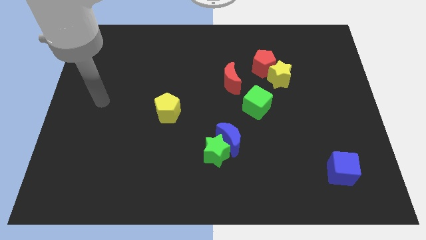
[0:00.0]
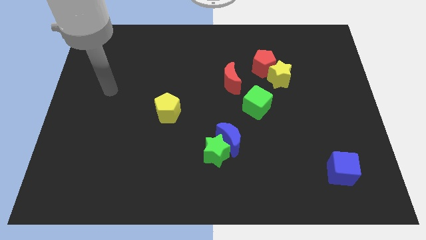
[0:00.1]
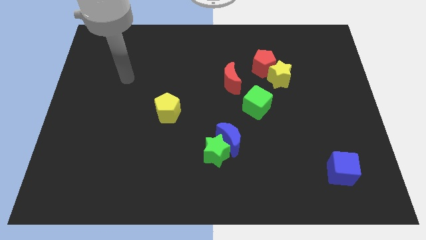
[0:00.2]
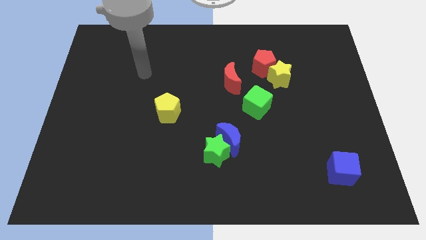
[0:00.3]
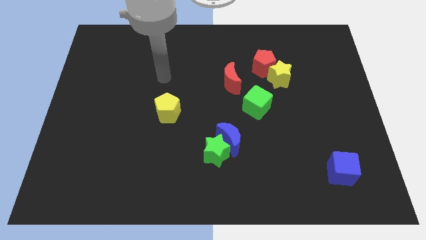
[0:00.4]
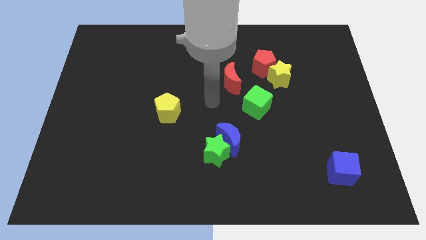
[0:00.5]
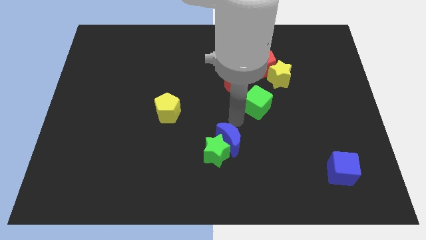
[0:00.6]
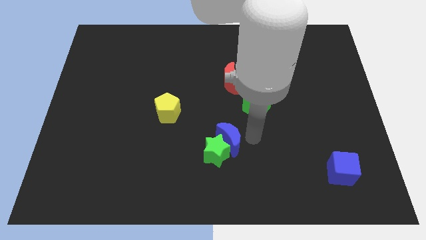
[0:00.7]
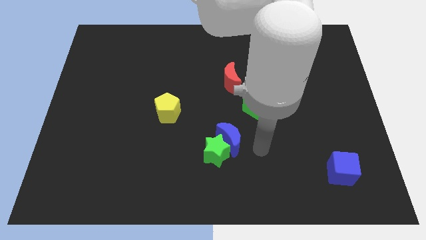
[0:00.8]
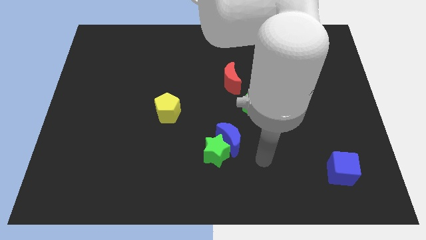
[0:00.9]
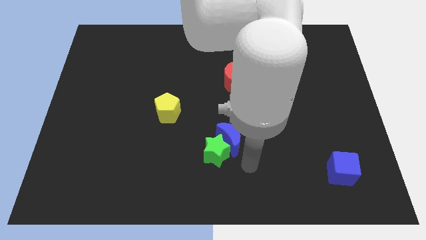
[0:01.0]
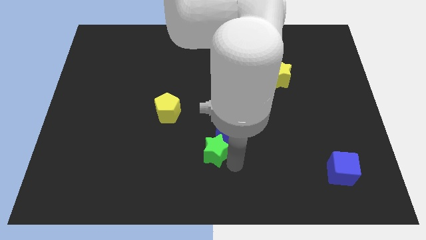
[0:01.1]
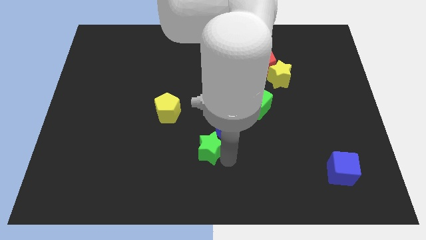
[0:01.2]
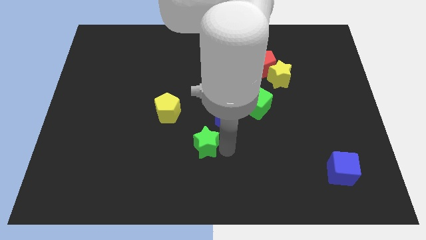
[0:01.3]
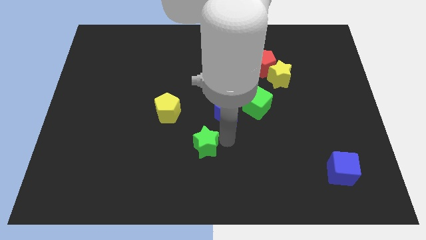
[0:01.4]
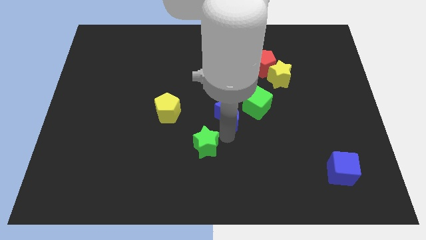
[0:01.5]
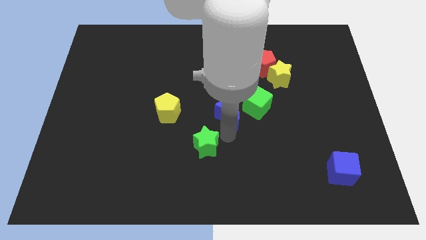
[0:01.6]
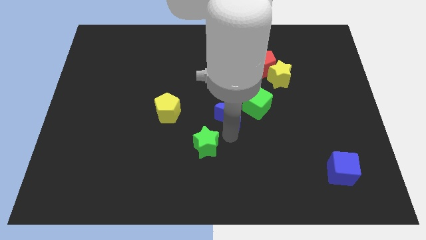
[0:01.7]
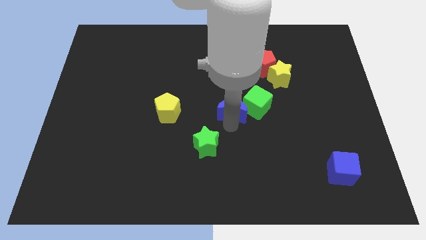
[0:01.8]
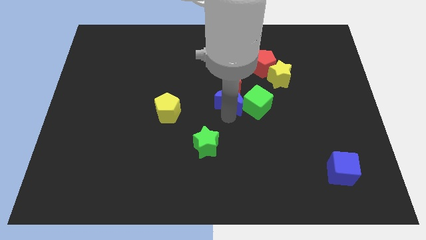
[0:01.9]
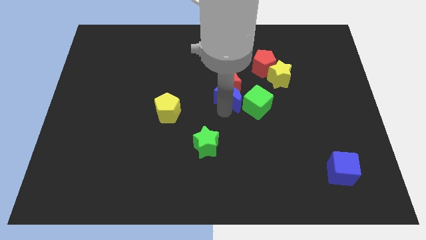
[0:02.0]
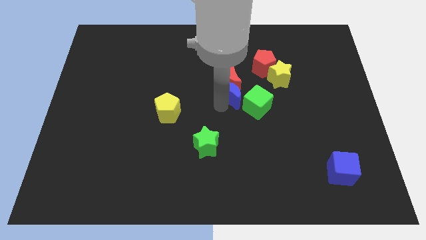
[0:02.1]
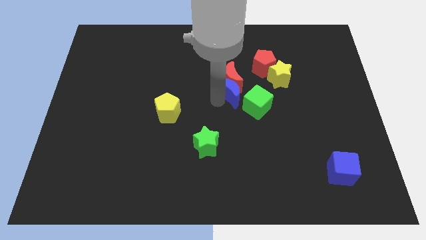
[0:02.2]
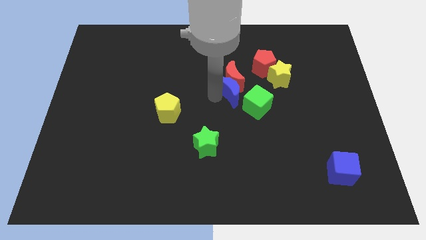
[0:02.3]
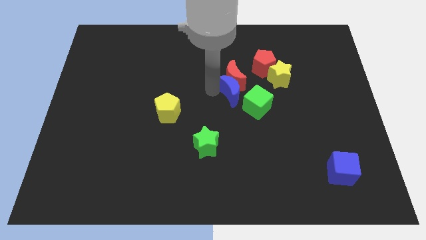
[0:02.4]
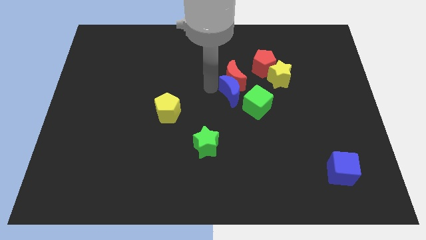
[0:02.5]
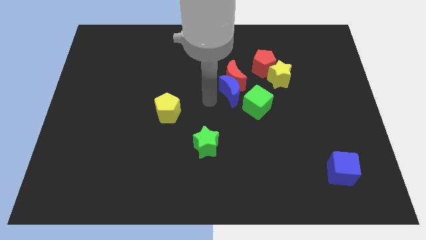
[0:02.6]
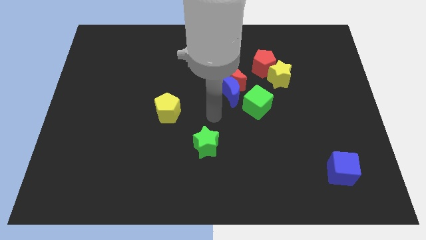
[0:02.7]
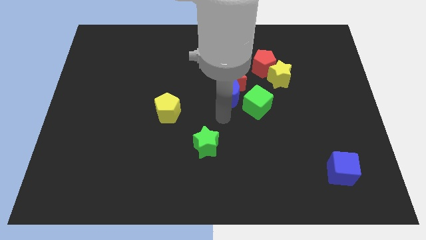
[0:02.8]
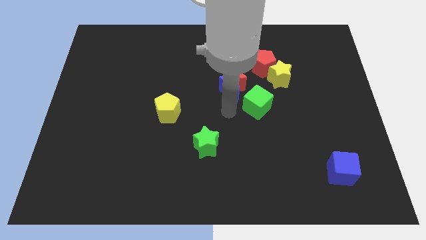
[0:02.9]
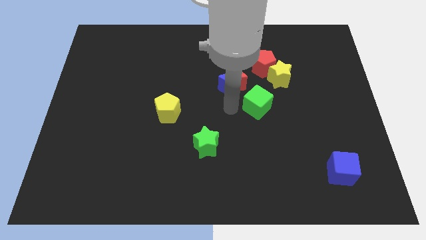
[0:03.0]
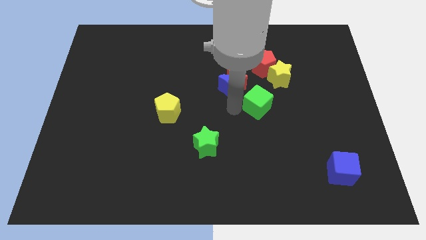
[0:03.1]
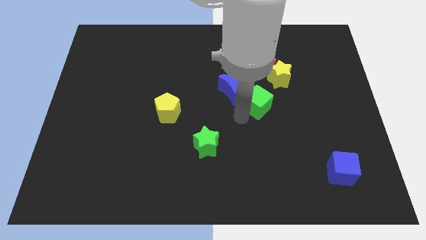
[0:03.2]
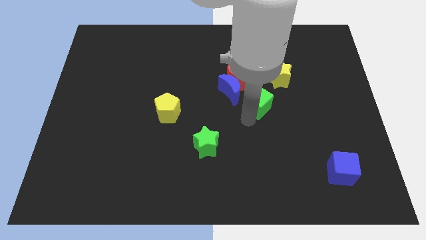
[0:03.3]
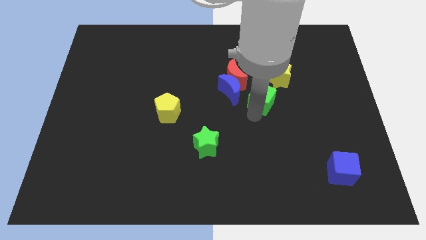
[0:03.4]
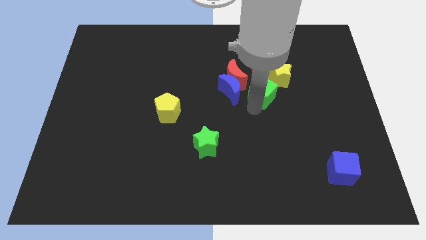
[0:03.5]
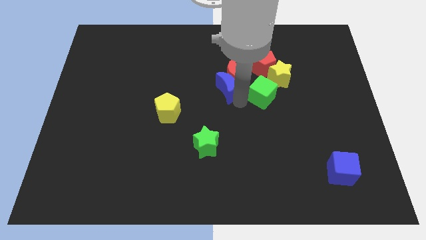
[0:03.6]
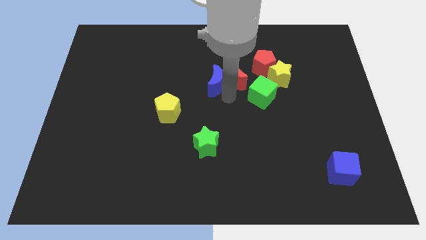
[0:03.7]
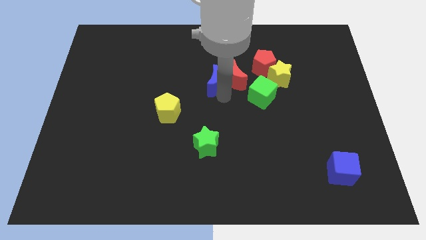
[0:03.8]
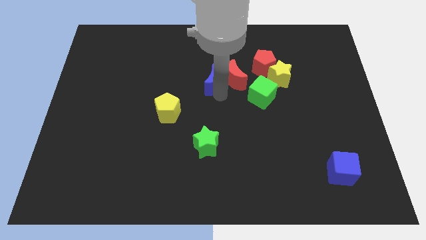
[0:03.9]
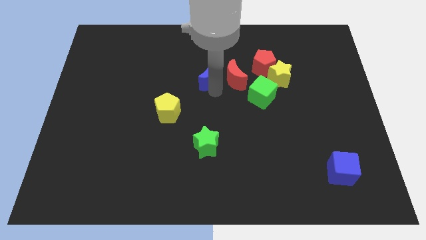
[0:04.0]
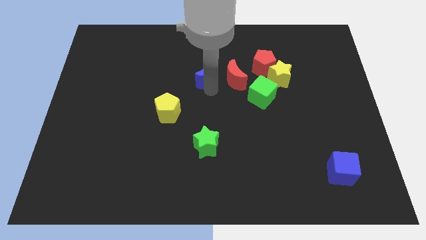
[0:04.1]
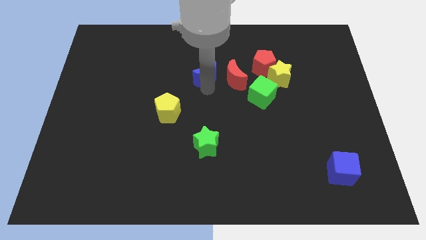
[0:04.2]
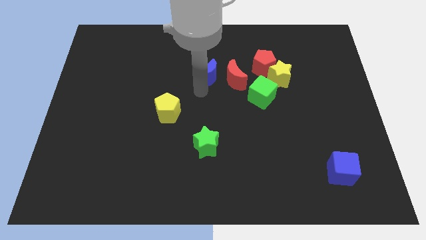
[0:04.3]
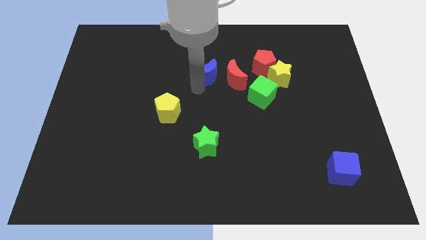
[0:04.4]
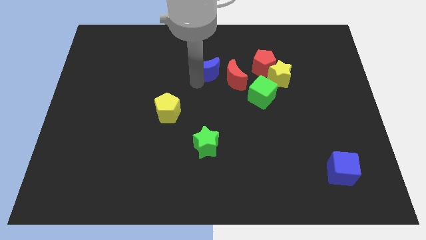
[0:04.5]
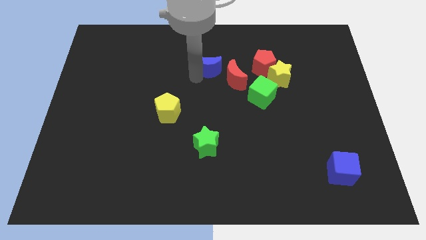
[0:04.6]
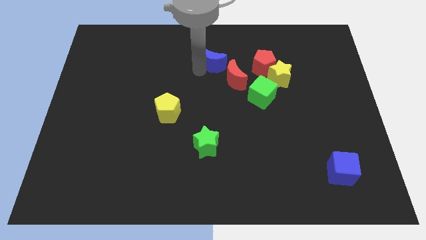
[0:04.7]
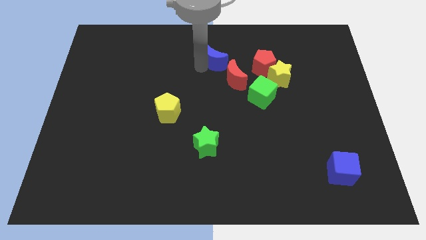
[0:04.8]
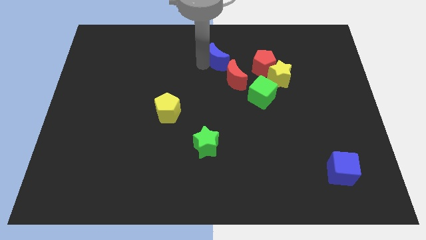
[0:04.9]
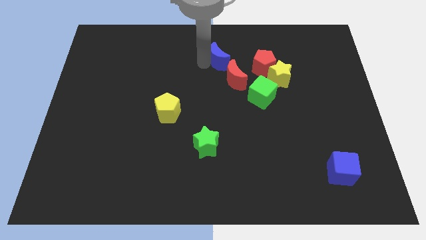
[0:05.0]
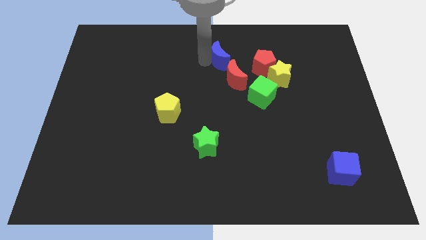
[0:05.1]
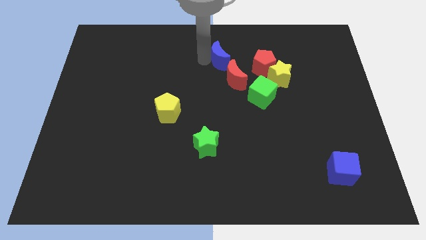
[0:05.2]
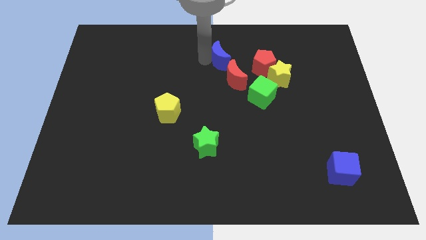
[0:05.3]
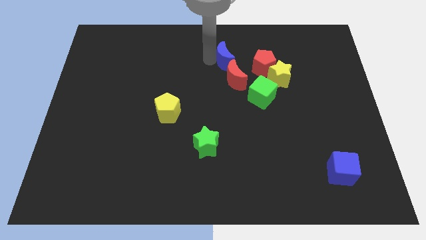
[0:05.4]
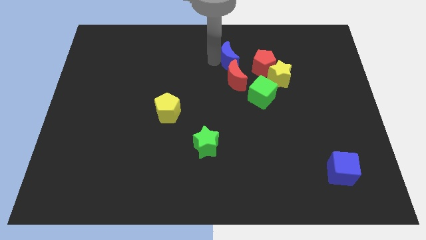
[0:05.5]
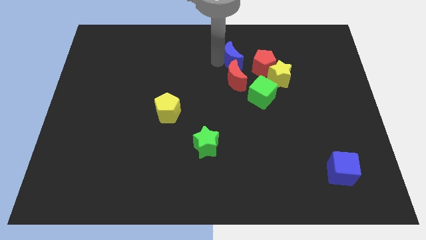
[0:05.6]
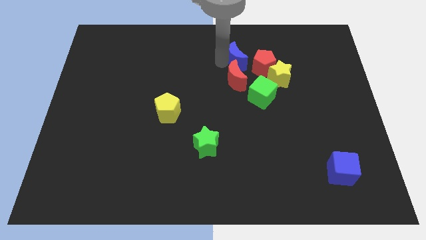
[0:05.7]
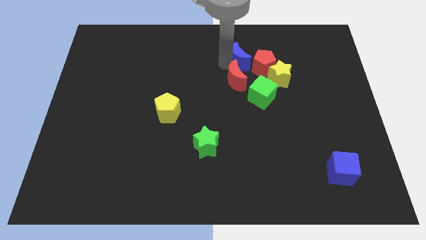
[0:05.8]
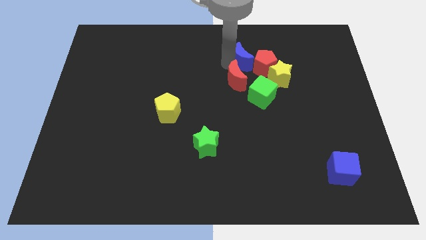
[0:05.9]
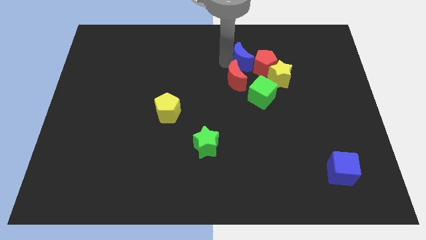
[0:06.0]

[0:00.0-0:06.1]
put the blue moon towards the red pentagon

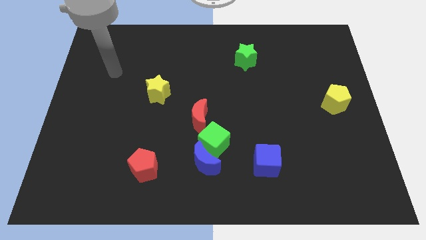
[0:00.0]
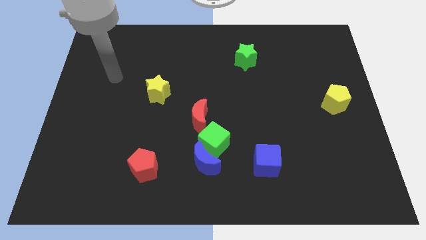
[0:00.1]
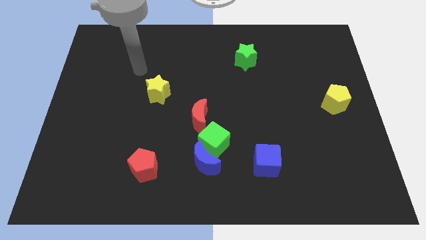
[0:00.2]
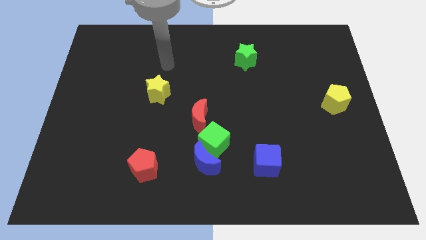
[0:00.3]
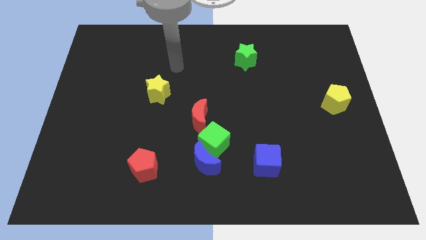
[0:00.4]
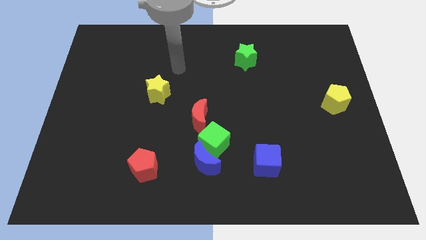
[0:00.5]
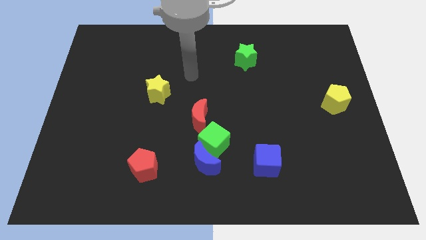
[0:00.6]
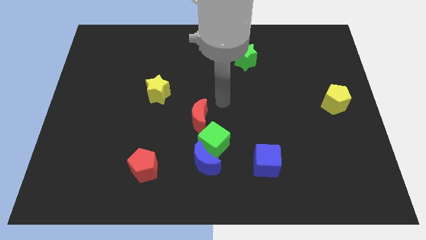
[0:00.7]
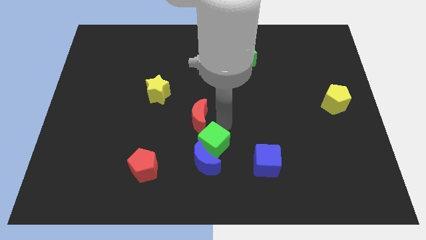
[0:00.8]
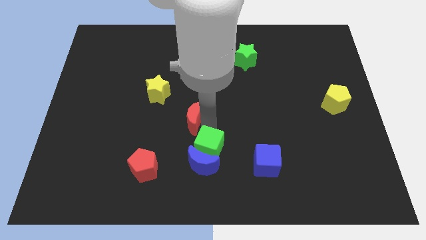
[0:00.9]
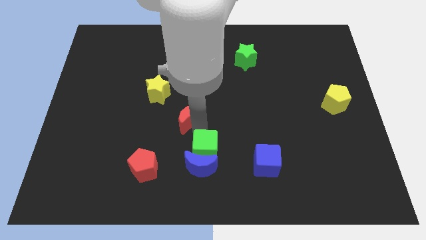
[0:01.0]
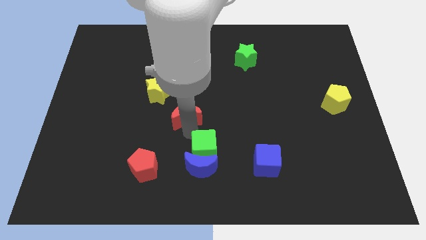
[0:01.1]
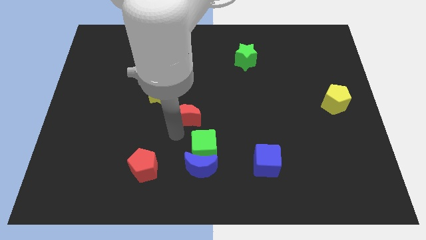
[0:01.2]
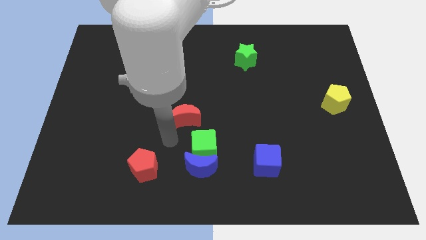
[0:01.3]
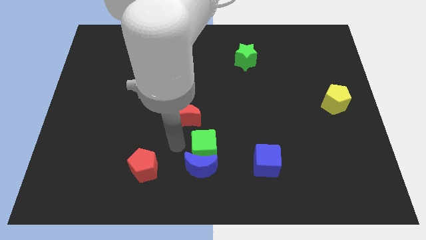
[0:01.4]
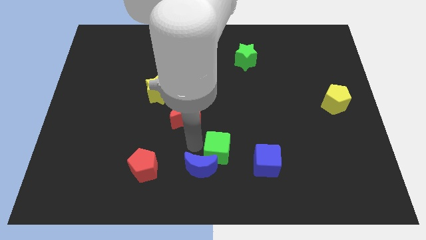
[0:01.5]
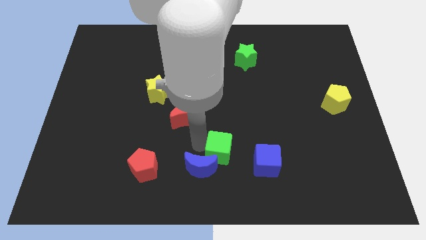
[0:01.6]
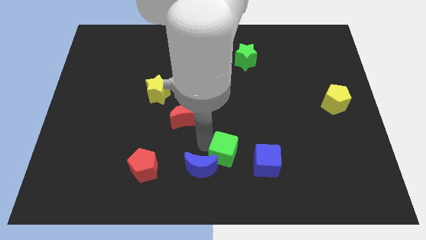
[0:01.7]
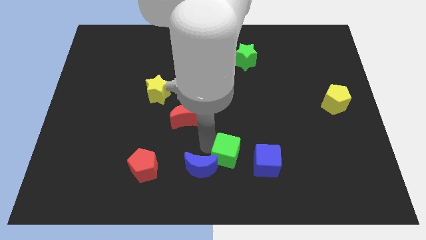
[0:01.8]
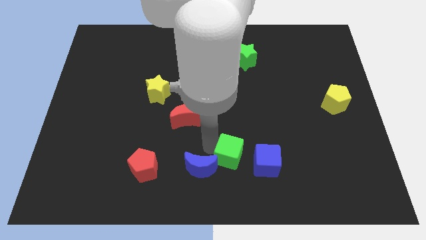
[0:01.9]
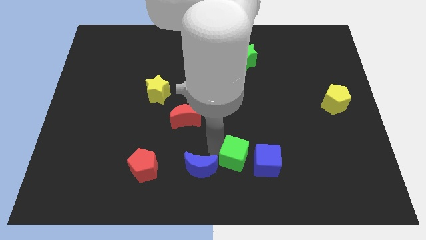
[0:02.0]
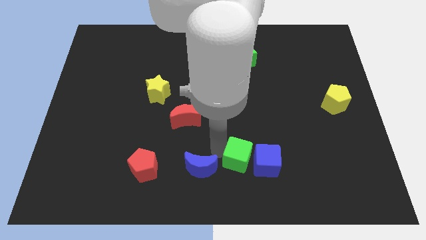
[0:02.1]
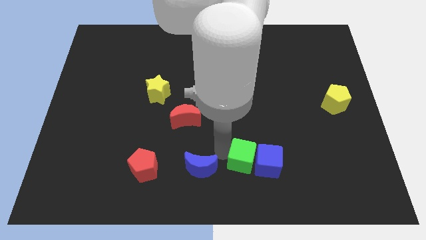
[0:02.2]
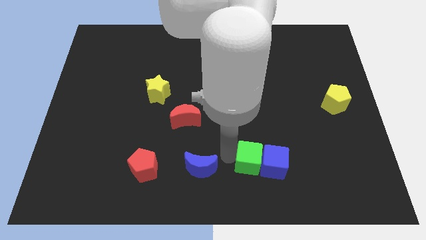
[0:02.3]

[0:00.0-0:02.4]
push the green cube to the blue cube
